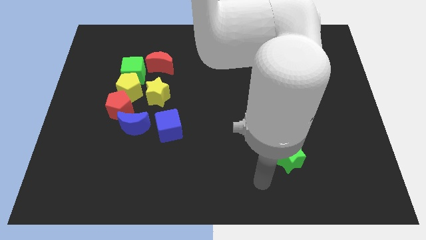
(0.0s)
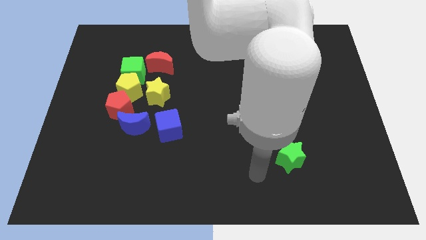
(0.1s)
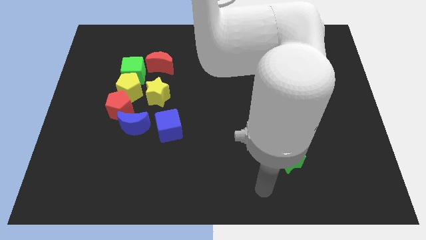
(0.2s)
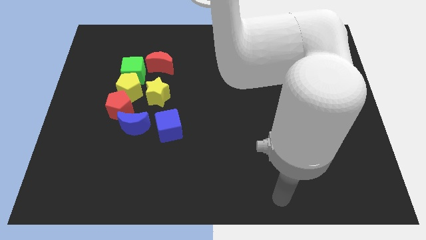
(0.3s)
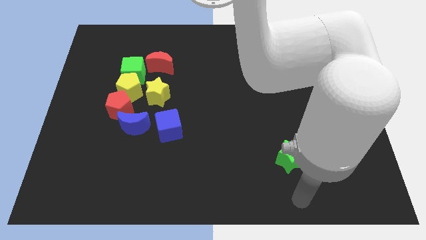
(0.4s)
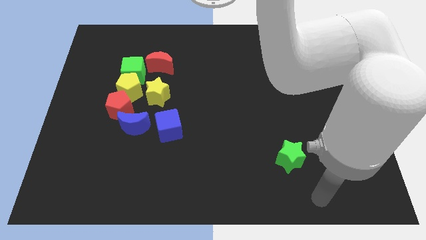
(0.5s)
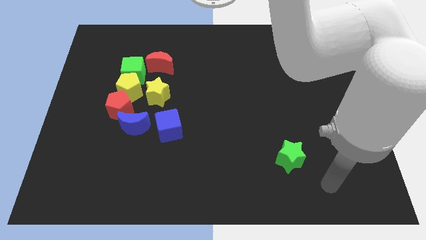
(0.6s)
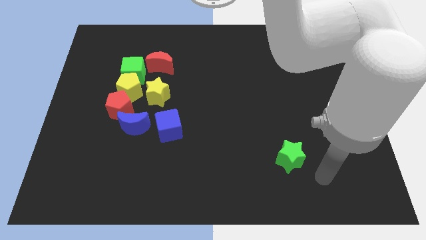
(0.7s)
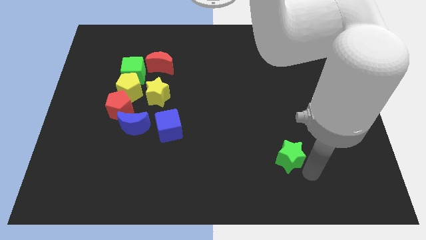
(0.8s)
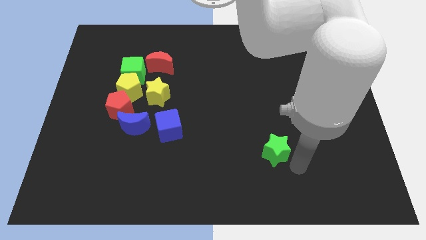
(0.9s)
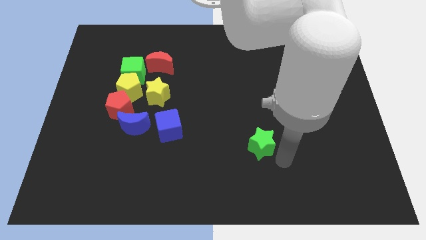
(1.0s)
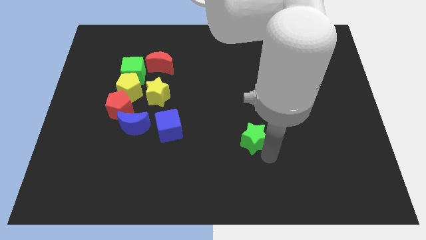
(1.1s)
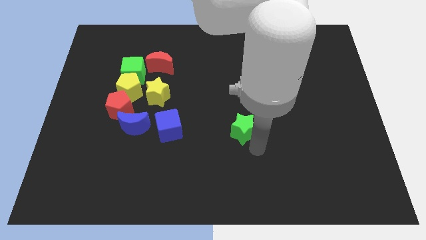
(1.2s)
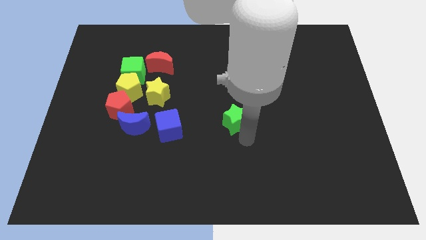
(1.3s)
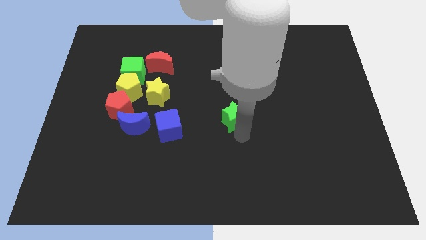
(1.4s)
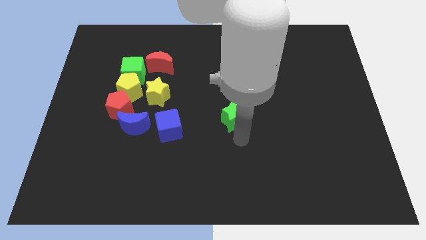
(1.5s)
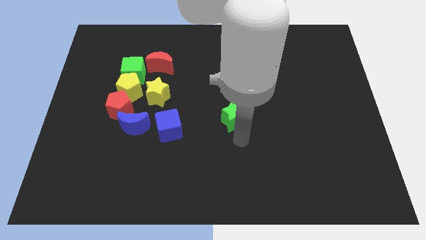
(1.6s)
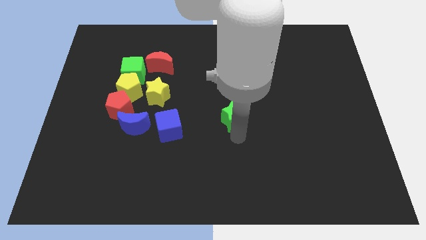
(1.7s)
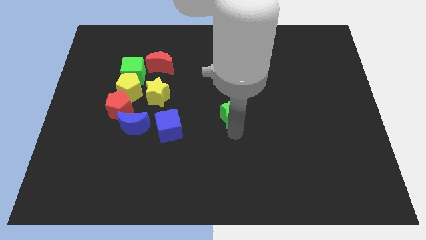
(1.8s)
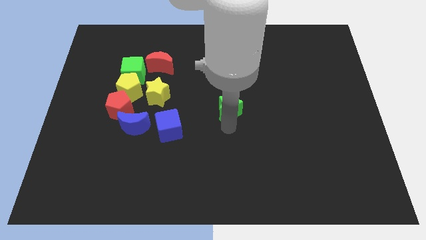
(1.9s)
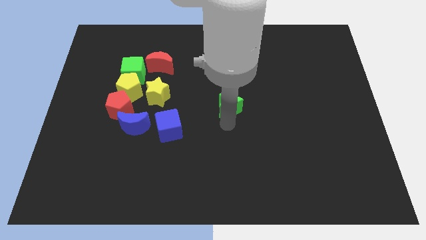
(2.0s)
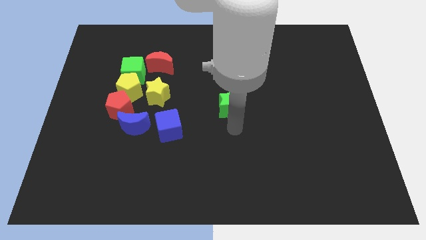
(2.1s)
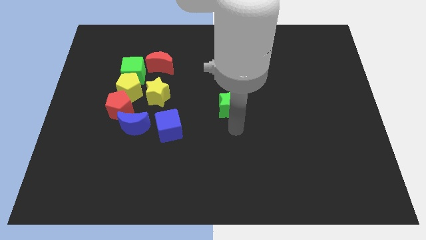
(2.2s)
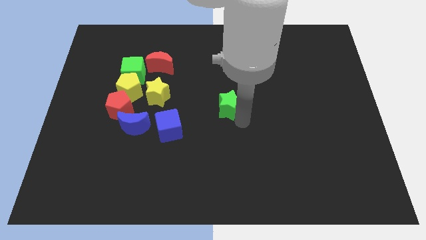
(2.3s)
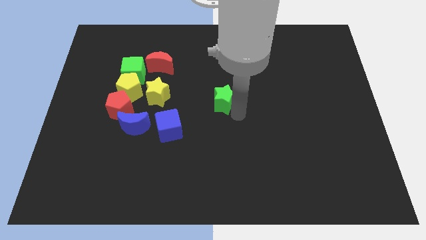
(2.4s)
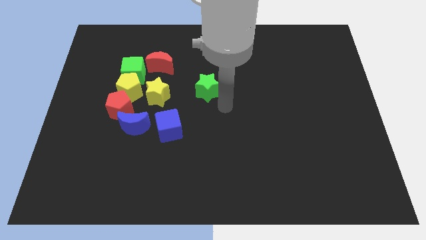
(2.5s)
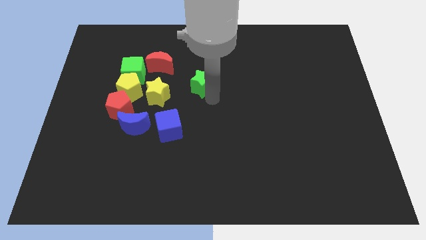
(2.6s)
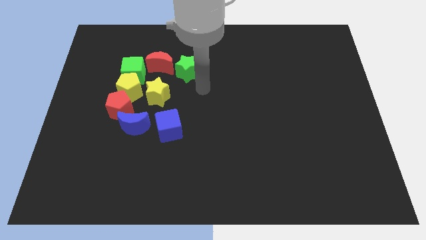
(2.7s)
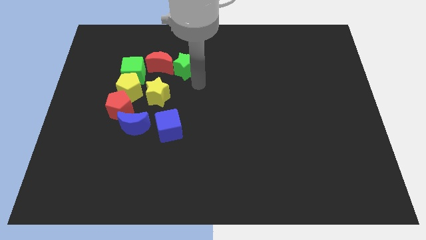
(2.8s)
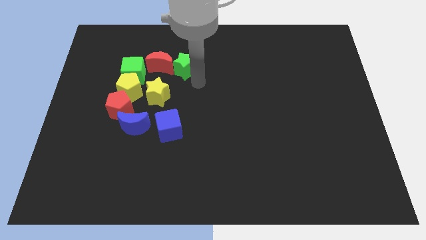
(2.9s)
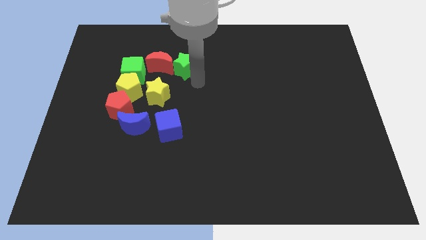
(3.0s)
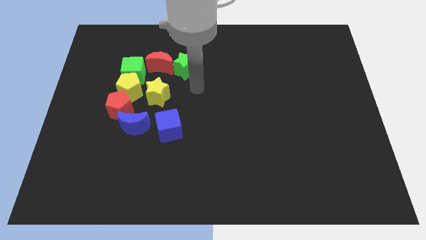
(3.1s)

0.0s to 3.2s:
push the green star into the right side of the red crescent

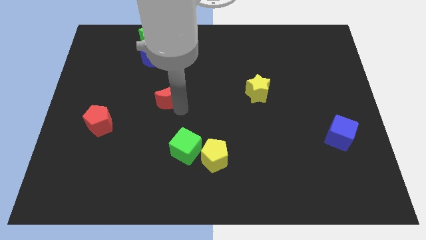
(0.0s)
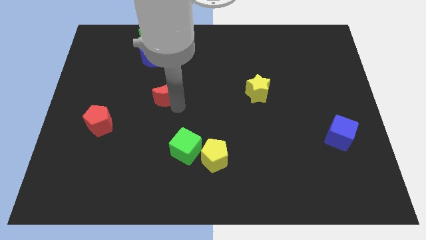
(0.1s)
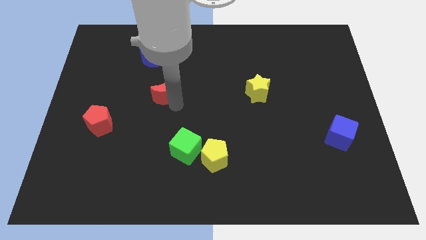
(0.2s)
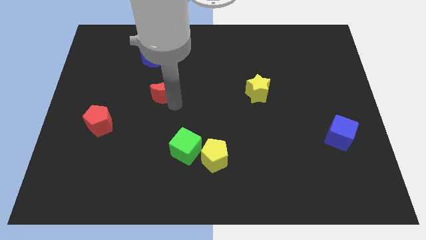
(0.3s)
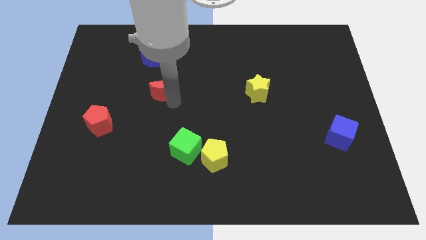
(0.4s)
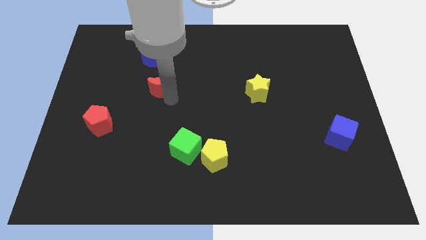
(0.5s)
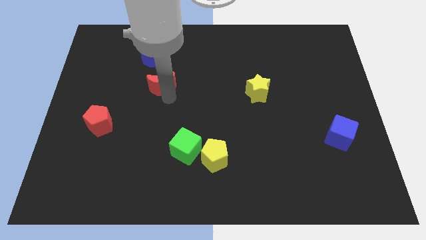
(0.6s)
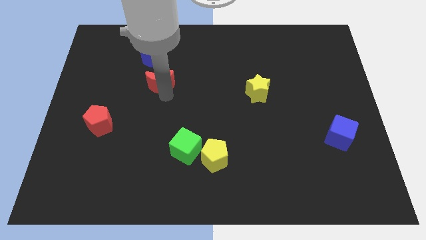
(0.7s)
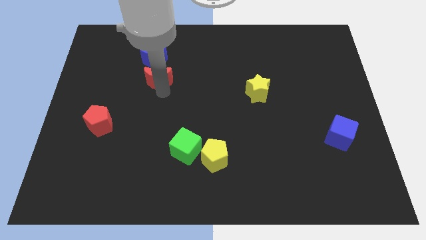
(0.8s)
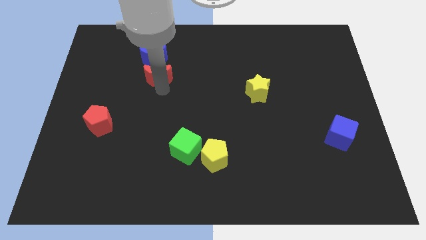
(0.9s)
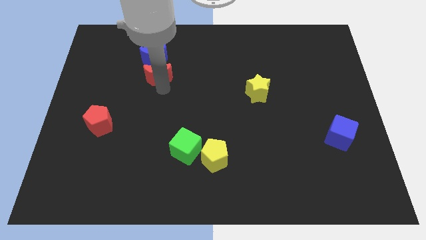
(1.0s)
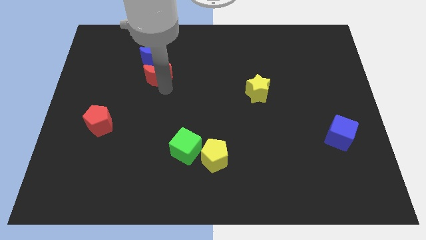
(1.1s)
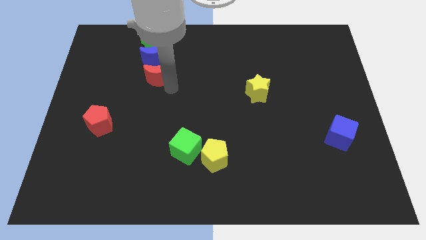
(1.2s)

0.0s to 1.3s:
move the red crescent below the blue crescent

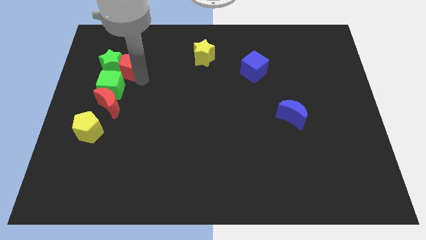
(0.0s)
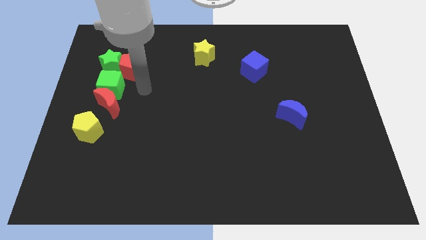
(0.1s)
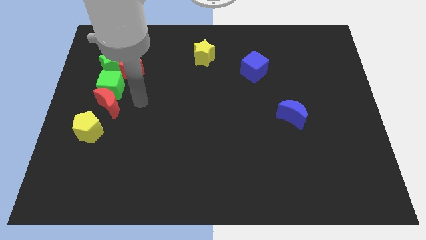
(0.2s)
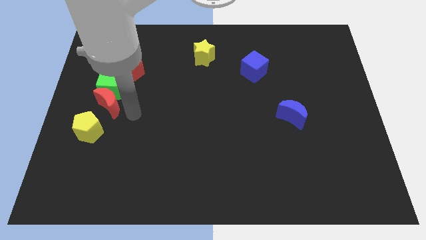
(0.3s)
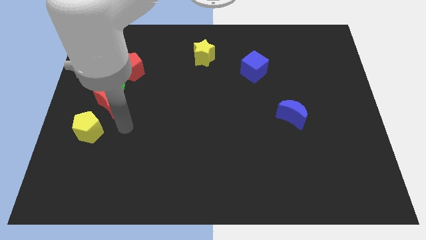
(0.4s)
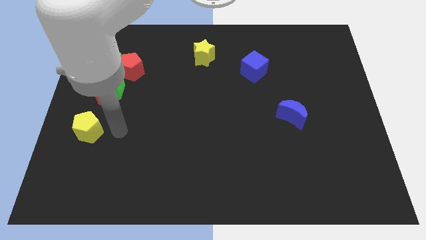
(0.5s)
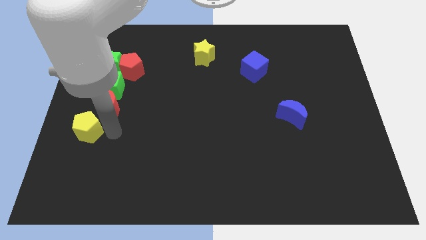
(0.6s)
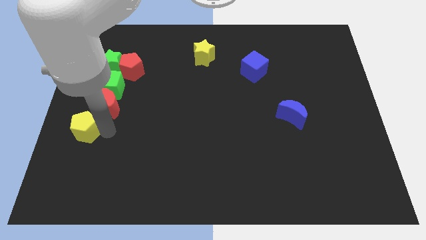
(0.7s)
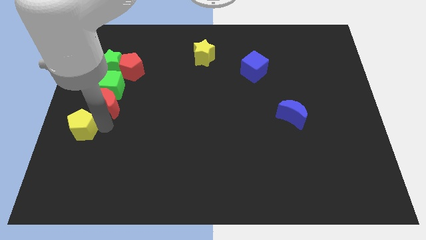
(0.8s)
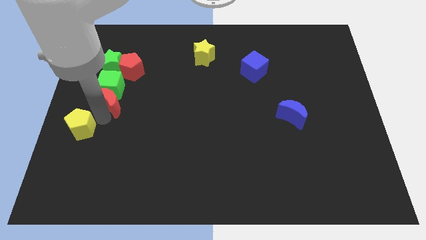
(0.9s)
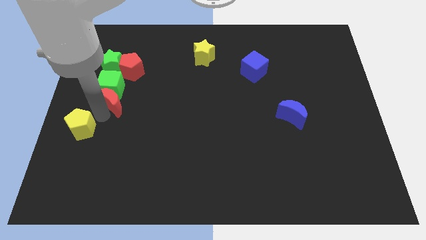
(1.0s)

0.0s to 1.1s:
place your arm in between yellow pentagon and red moon

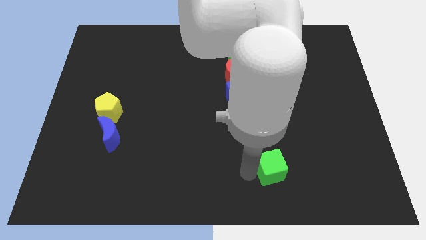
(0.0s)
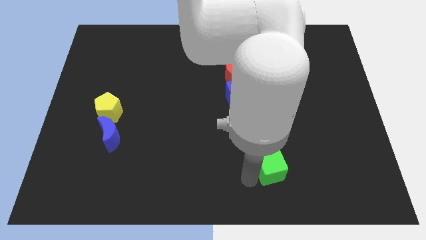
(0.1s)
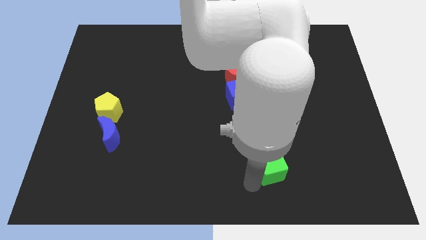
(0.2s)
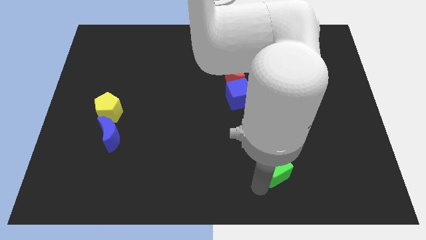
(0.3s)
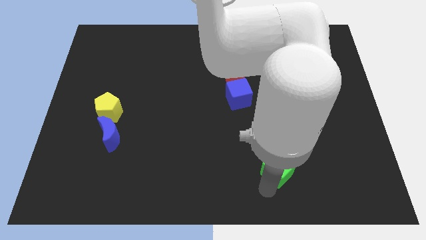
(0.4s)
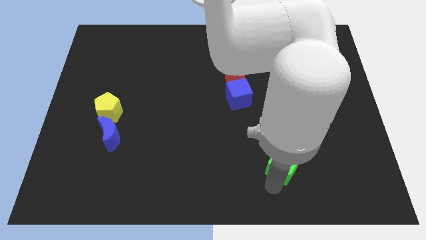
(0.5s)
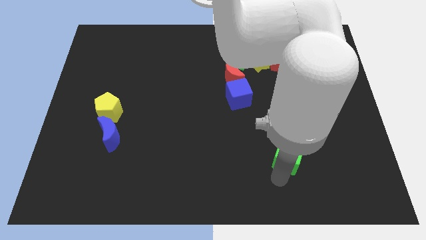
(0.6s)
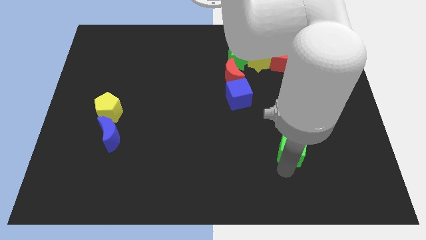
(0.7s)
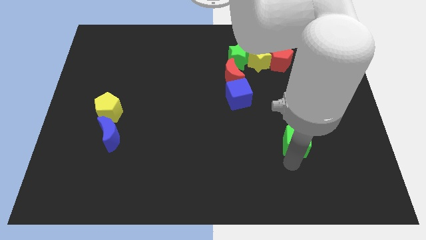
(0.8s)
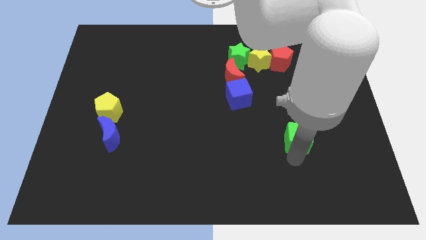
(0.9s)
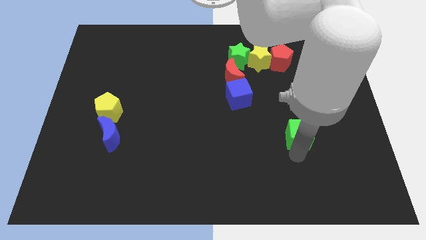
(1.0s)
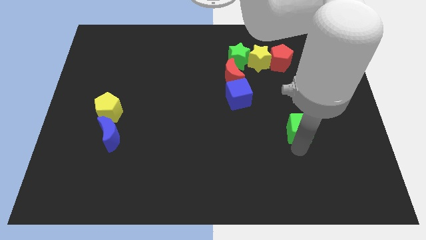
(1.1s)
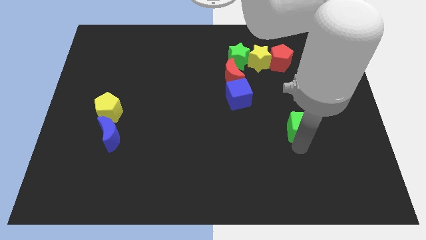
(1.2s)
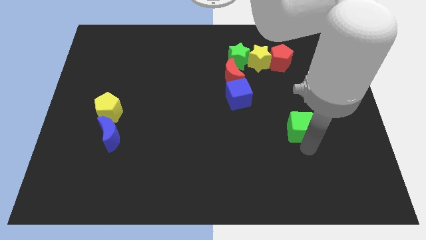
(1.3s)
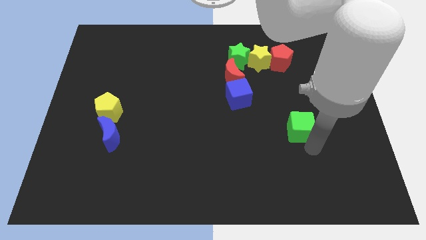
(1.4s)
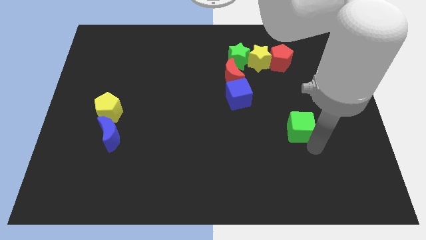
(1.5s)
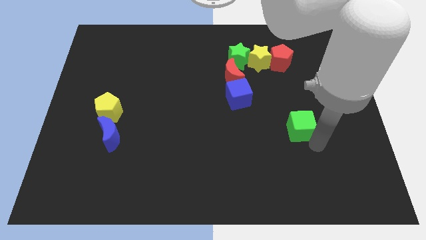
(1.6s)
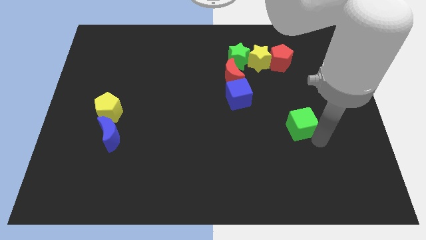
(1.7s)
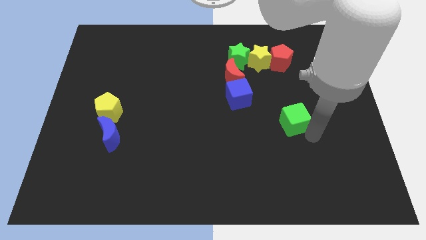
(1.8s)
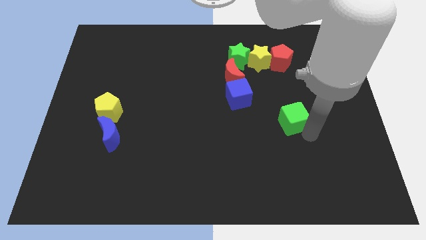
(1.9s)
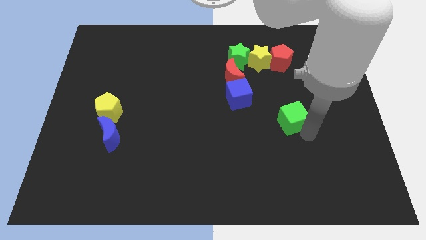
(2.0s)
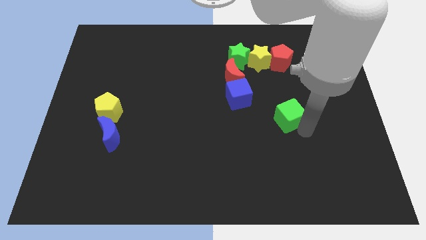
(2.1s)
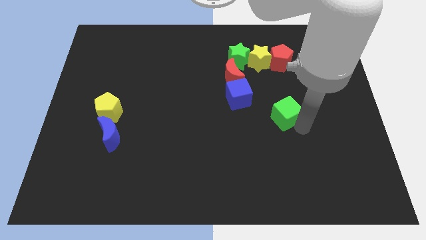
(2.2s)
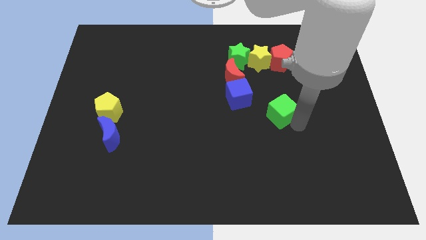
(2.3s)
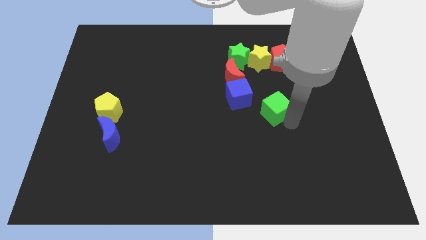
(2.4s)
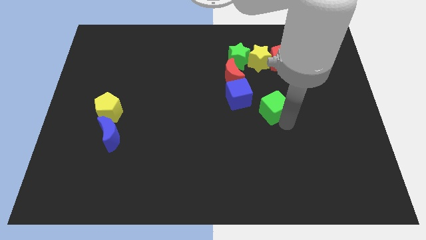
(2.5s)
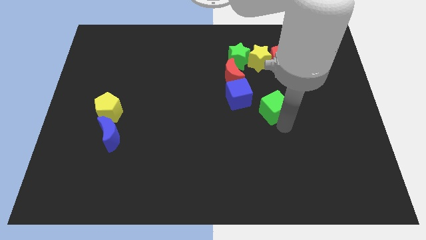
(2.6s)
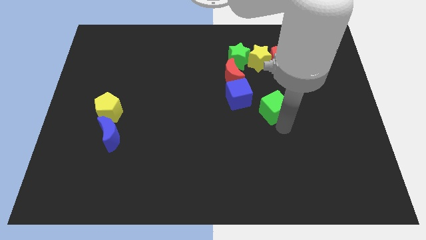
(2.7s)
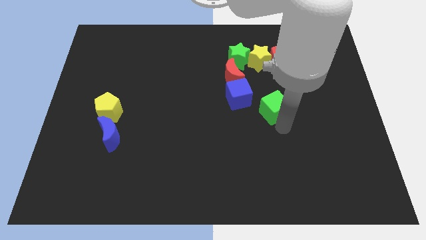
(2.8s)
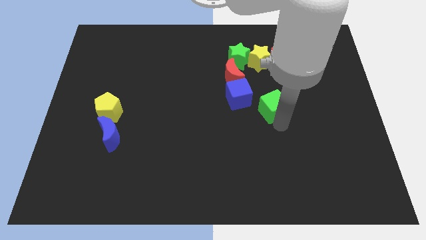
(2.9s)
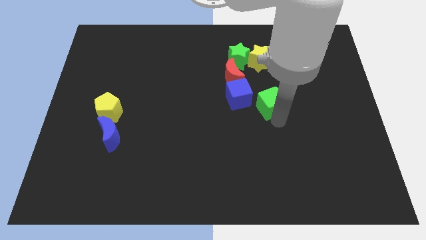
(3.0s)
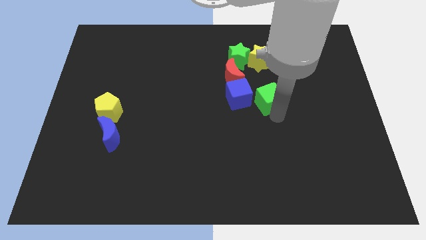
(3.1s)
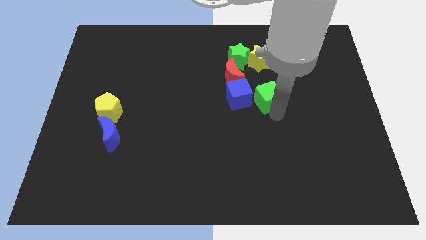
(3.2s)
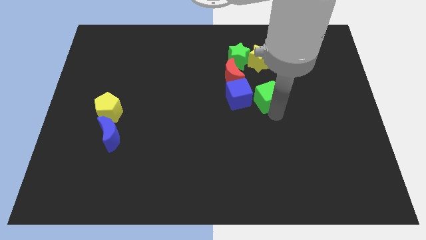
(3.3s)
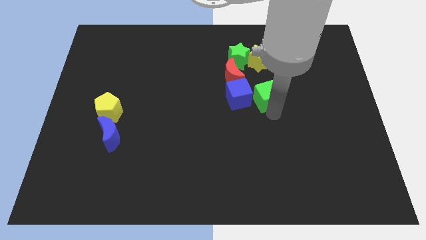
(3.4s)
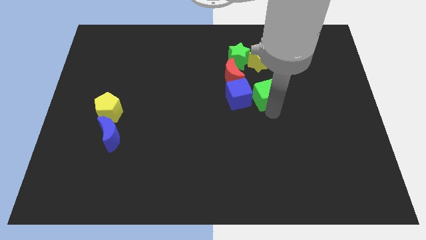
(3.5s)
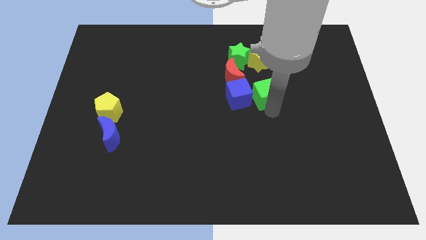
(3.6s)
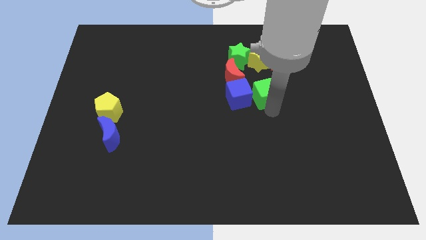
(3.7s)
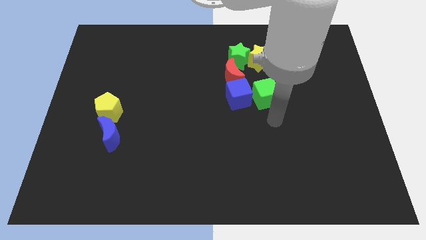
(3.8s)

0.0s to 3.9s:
place the green cube right to the blue cube
